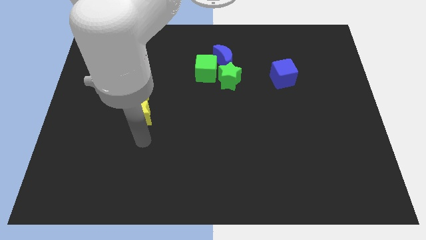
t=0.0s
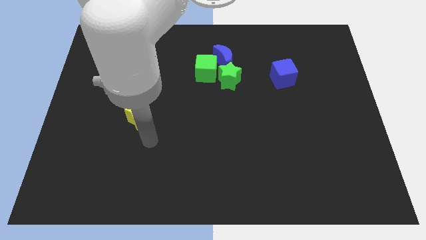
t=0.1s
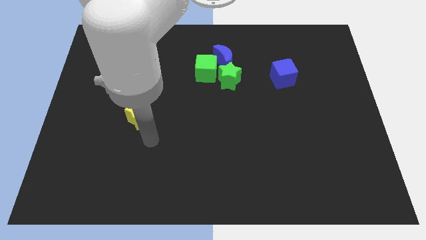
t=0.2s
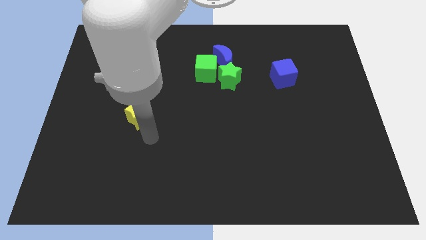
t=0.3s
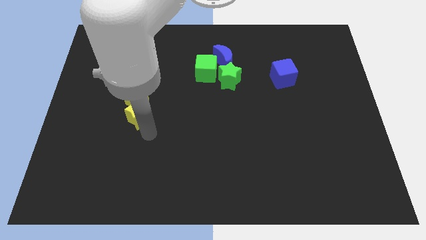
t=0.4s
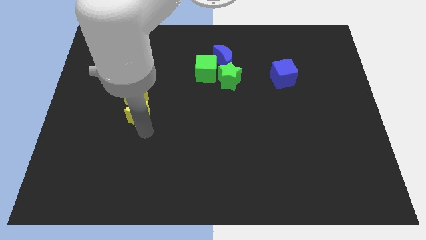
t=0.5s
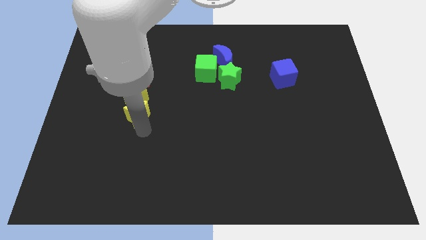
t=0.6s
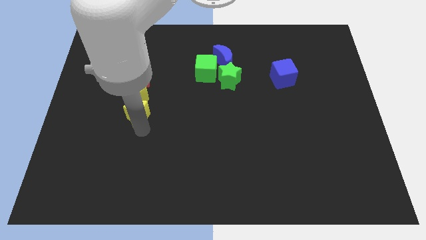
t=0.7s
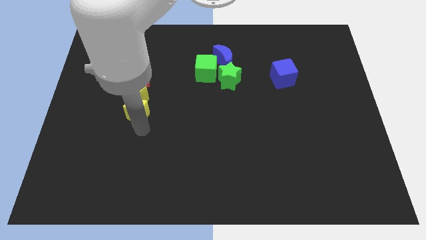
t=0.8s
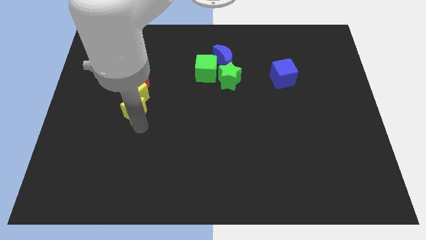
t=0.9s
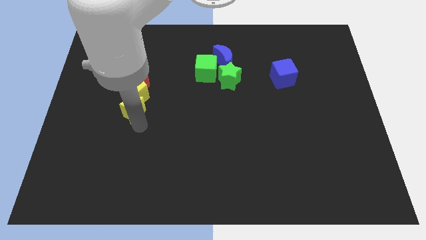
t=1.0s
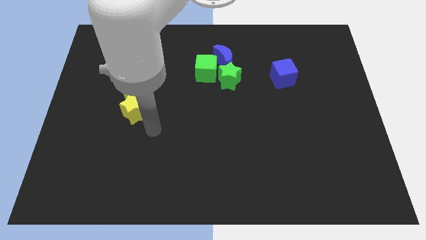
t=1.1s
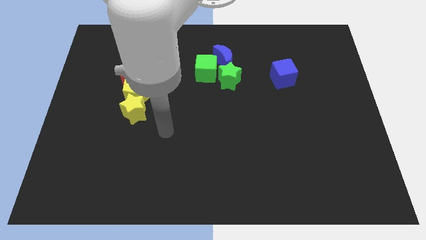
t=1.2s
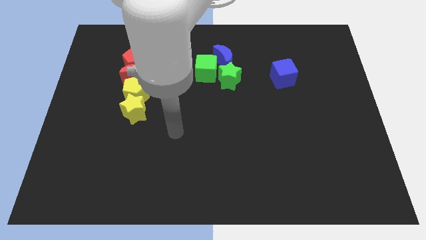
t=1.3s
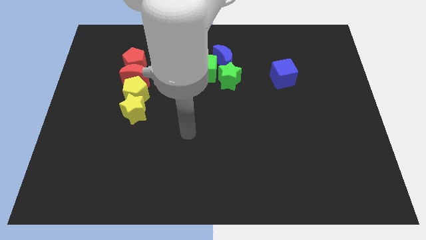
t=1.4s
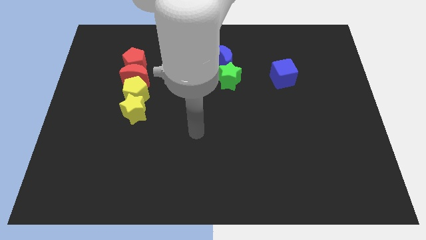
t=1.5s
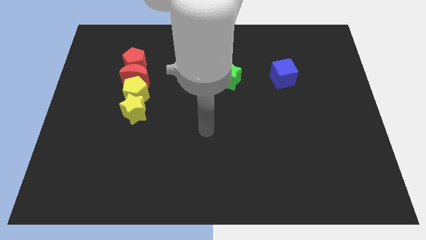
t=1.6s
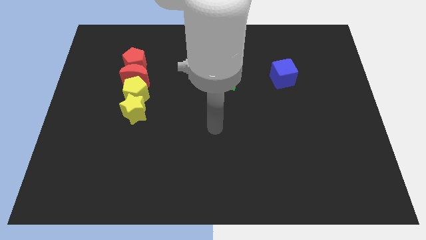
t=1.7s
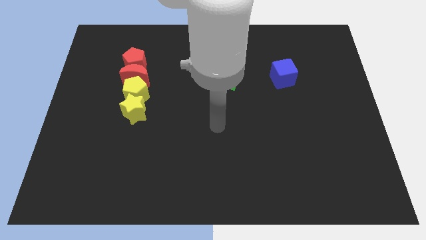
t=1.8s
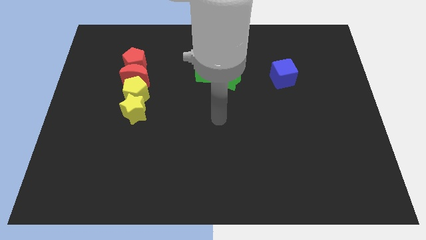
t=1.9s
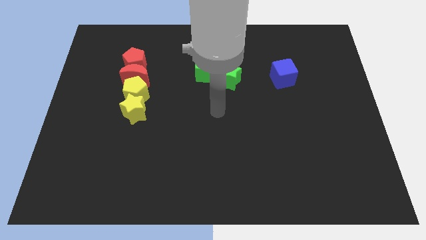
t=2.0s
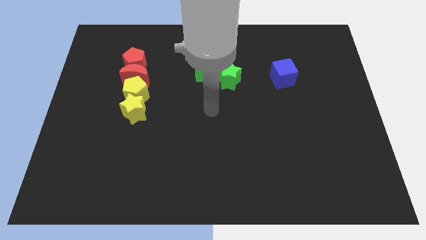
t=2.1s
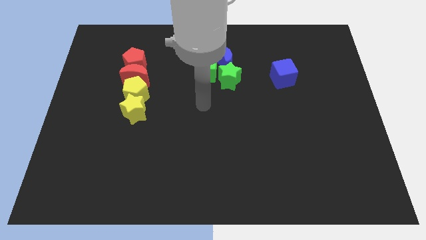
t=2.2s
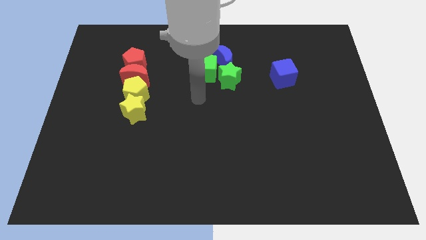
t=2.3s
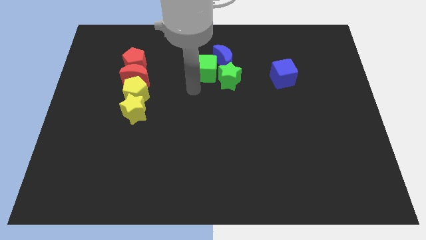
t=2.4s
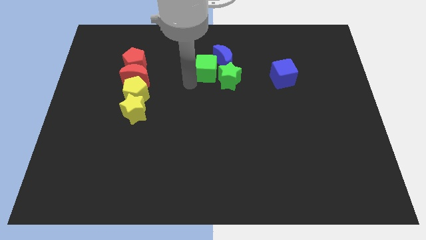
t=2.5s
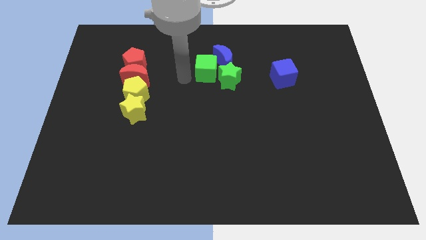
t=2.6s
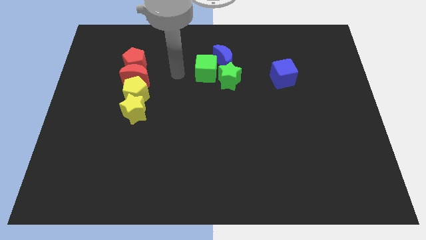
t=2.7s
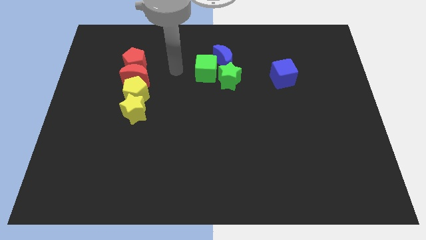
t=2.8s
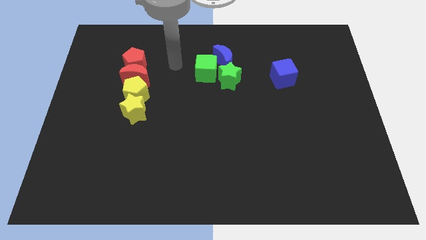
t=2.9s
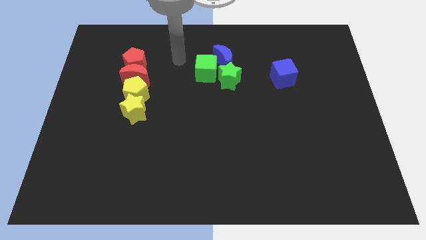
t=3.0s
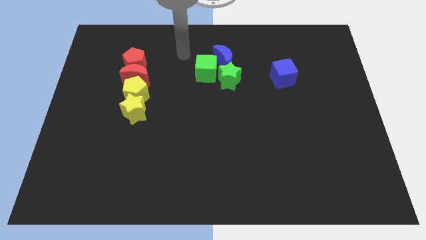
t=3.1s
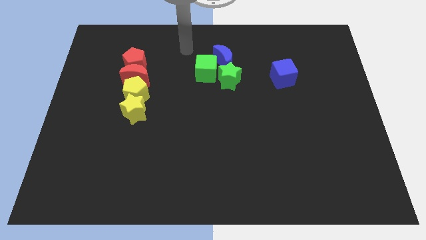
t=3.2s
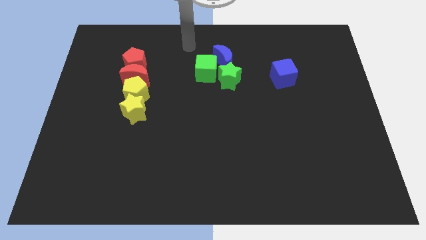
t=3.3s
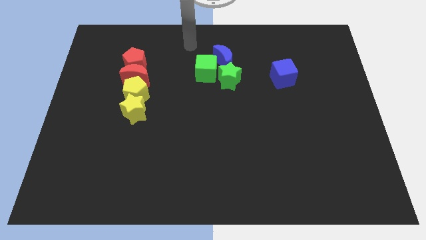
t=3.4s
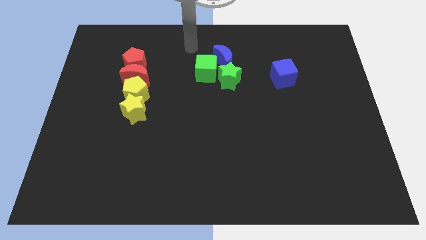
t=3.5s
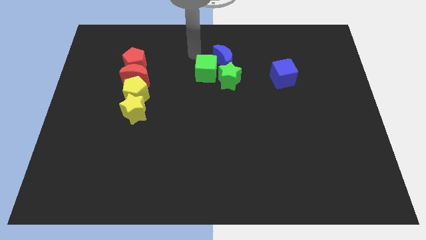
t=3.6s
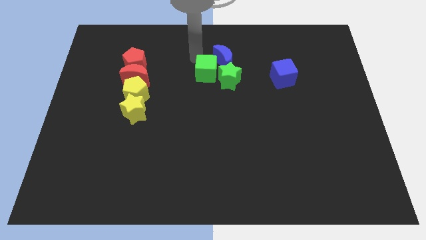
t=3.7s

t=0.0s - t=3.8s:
place the arm above the green cube

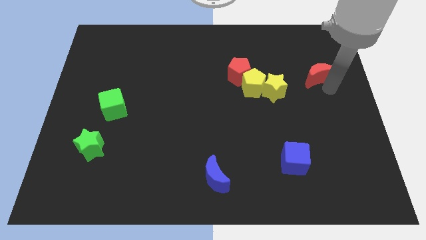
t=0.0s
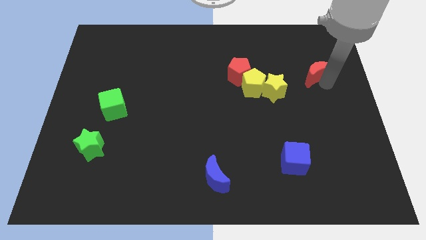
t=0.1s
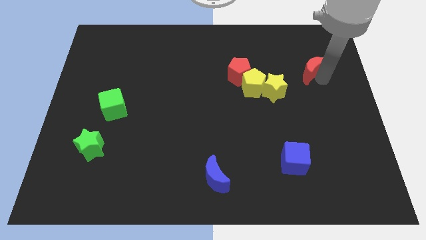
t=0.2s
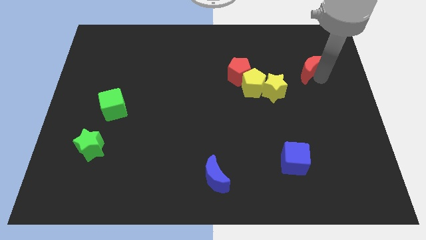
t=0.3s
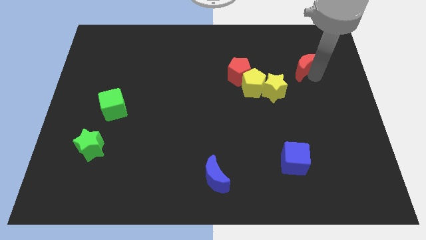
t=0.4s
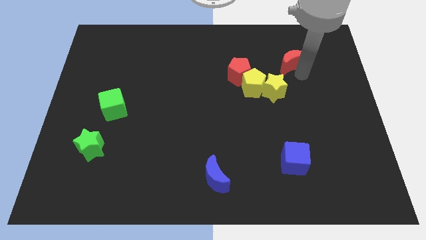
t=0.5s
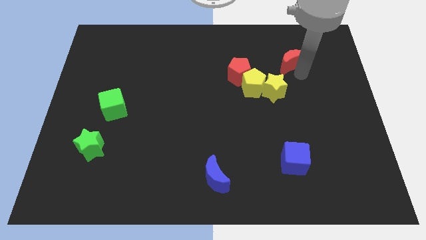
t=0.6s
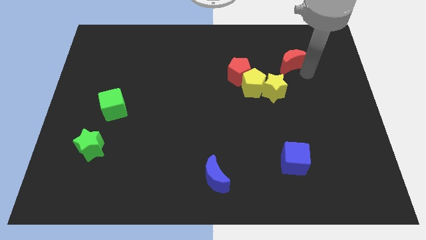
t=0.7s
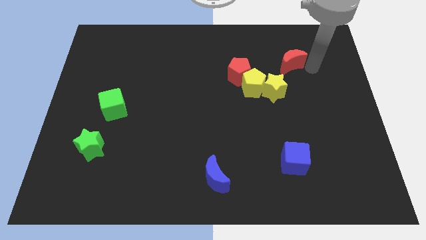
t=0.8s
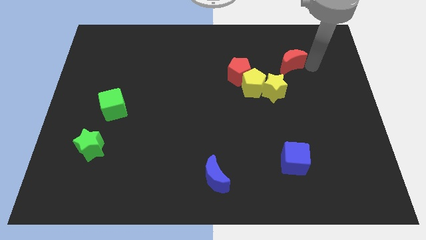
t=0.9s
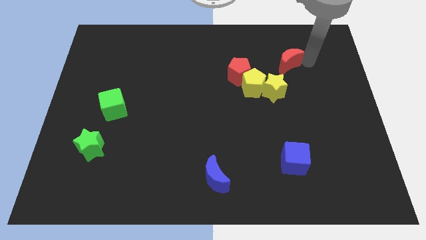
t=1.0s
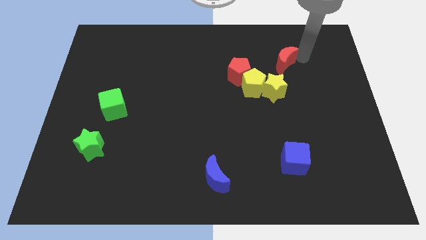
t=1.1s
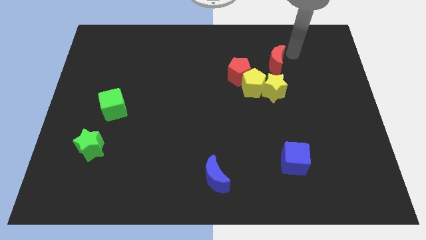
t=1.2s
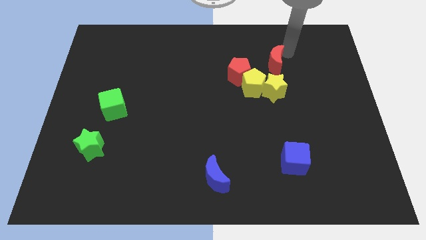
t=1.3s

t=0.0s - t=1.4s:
place the red moon above the yellow star

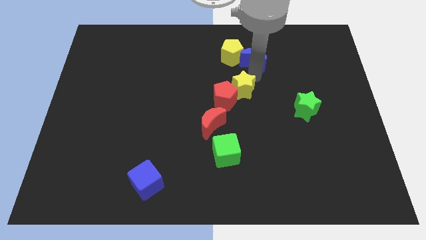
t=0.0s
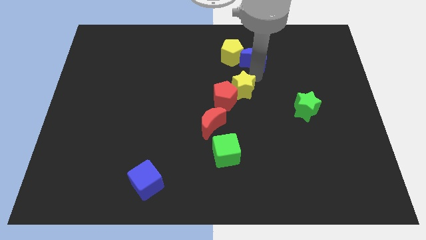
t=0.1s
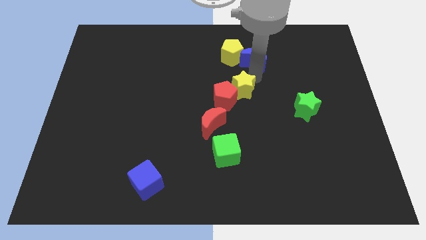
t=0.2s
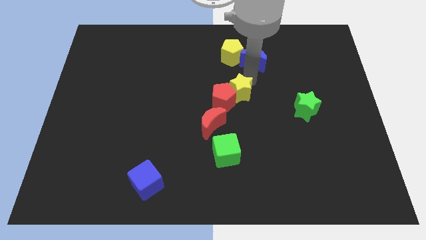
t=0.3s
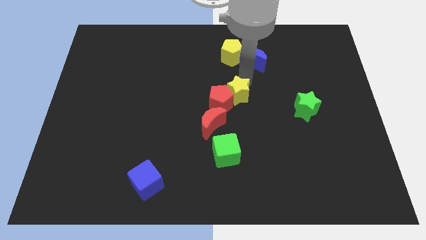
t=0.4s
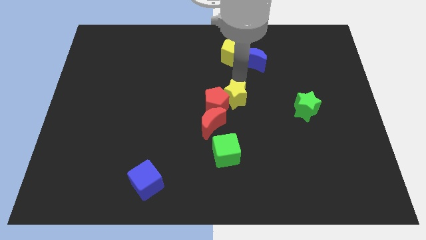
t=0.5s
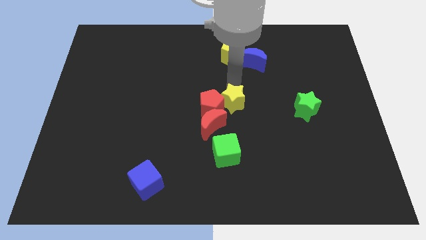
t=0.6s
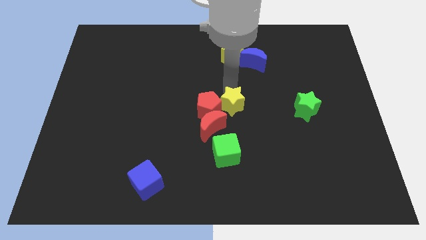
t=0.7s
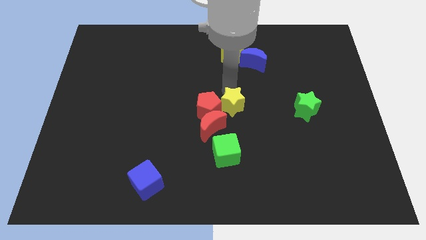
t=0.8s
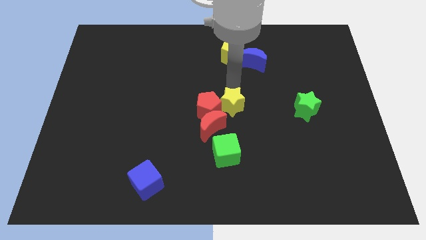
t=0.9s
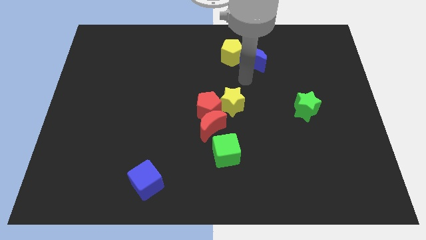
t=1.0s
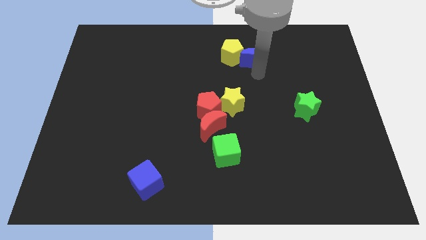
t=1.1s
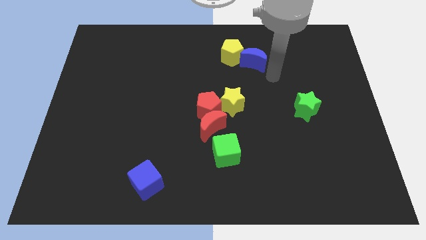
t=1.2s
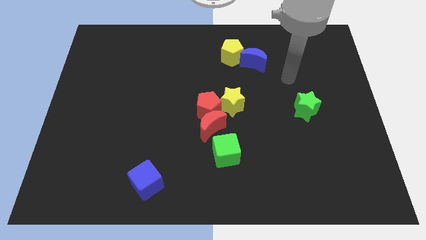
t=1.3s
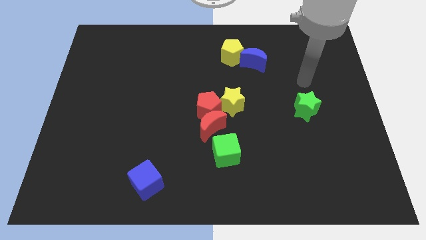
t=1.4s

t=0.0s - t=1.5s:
push yellow star and red pentagon in to red moon

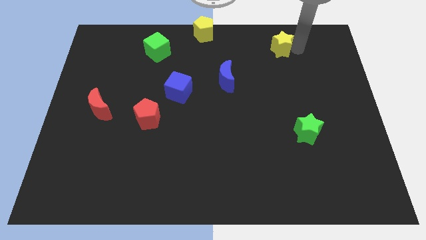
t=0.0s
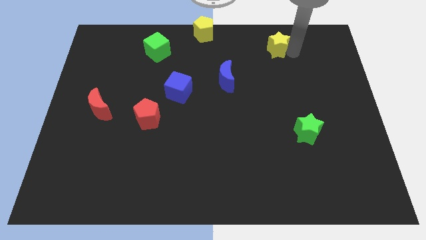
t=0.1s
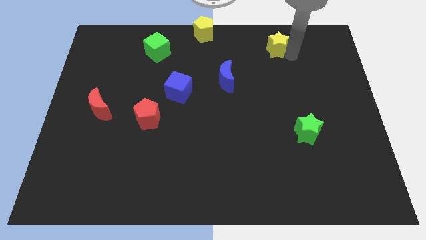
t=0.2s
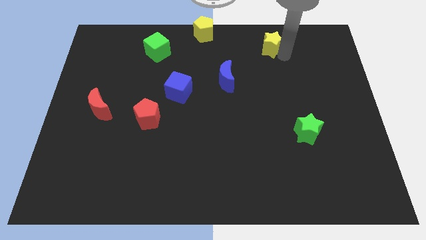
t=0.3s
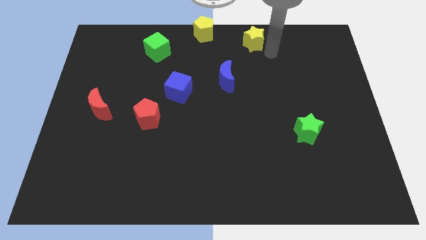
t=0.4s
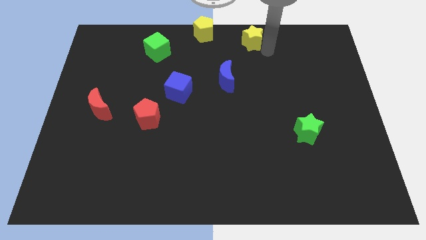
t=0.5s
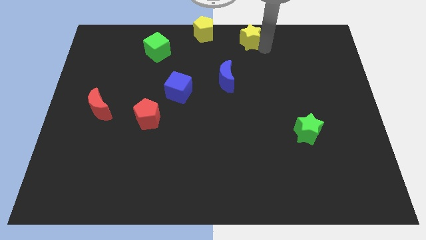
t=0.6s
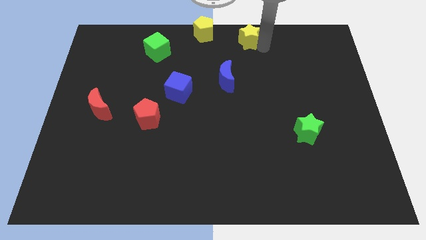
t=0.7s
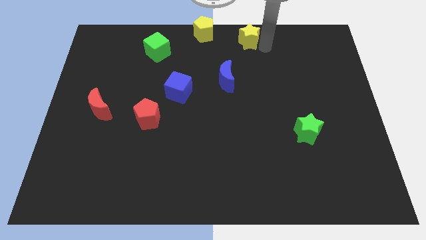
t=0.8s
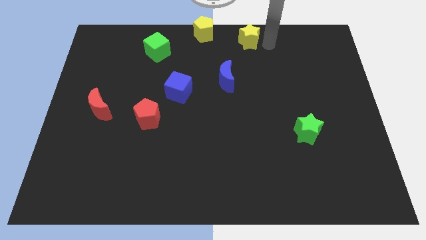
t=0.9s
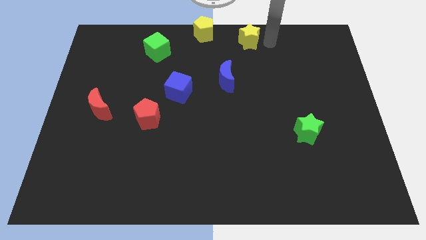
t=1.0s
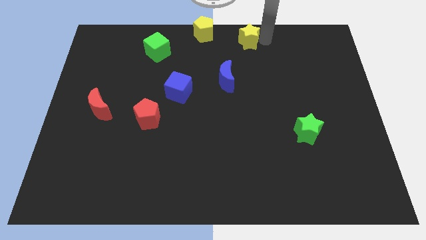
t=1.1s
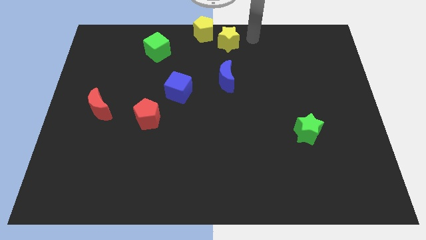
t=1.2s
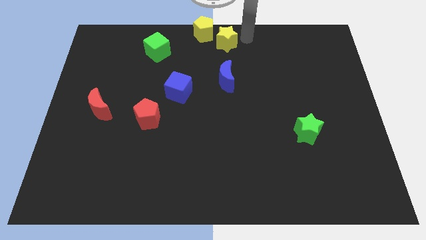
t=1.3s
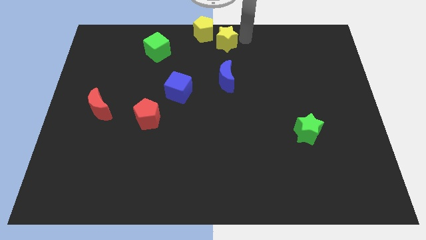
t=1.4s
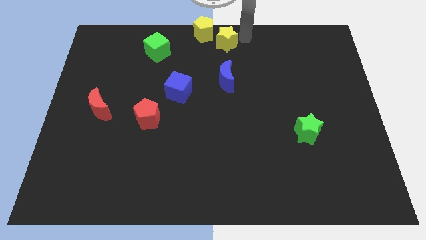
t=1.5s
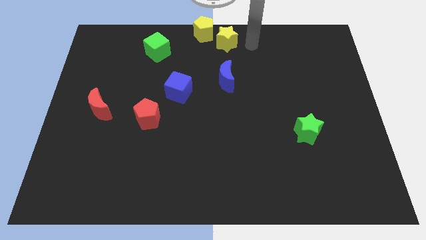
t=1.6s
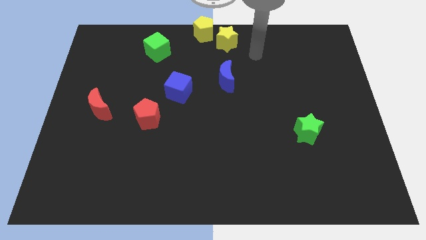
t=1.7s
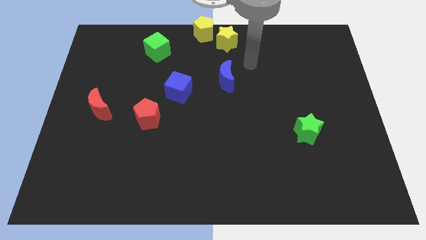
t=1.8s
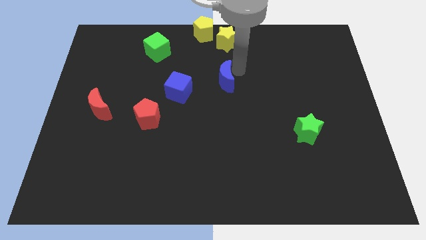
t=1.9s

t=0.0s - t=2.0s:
place the yellow star at the top of the blue moon

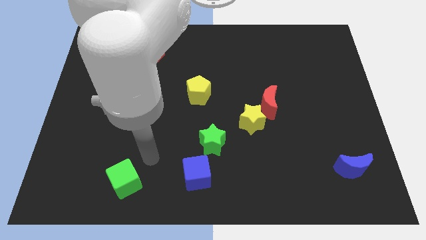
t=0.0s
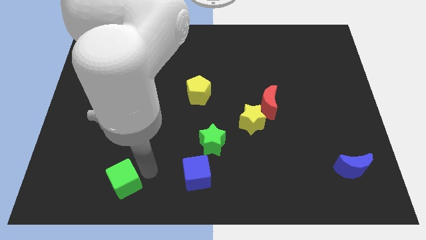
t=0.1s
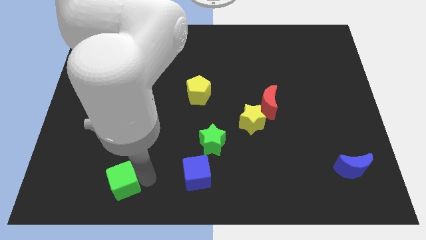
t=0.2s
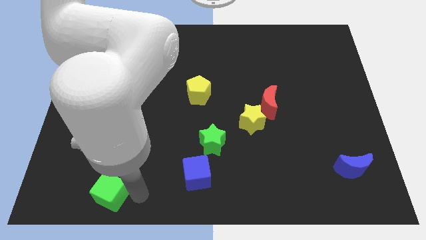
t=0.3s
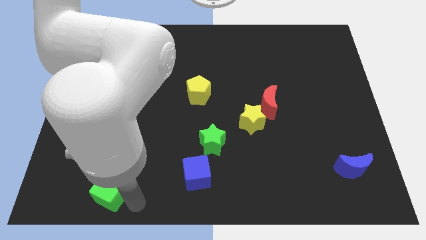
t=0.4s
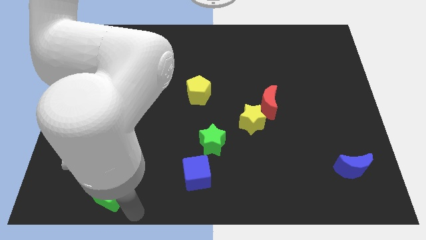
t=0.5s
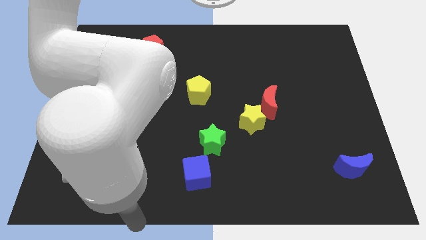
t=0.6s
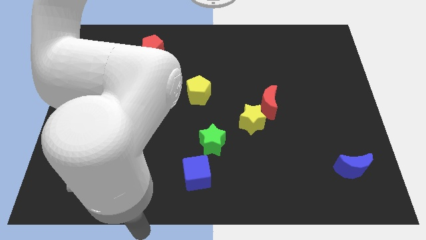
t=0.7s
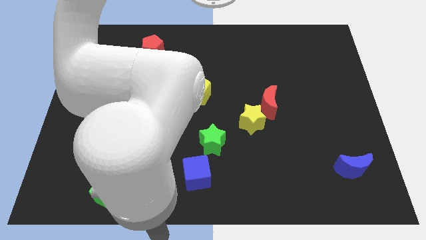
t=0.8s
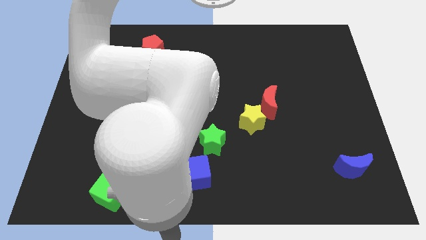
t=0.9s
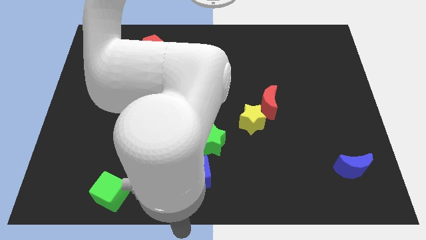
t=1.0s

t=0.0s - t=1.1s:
tap at the right side of the green cube
